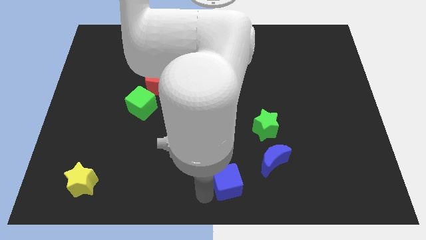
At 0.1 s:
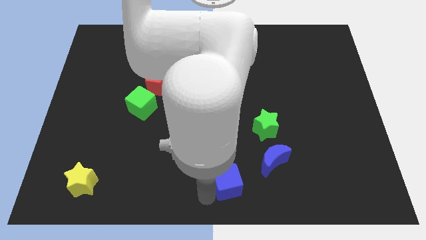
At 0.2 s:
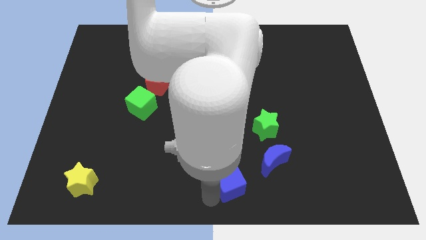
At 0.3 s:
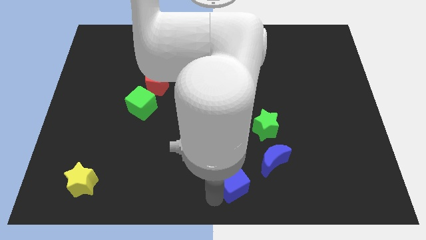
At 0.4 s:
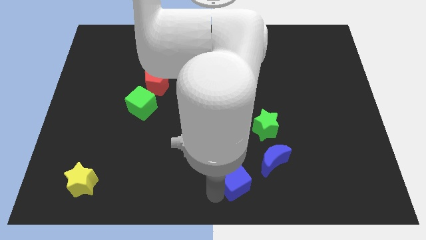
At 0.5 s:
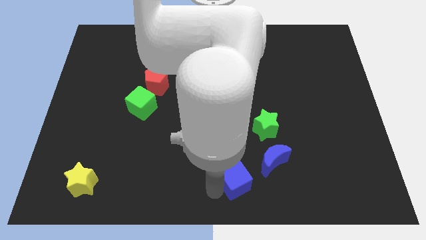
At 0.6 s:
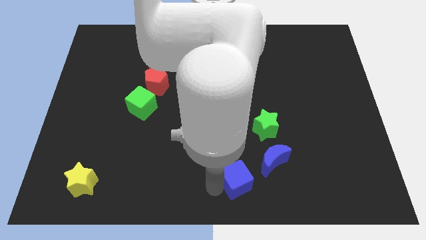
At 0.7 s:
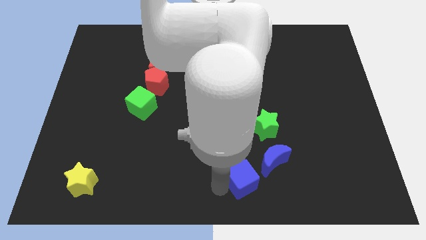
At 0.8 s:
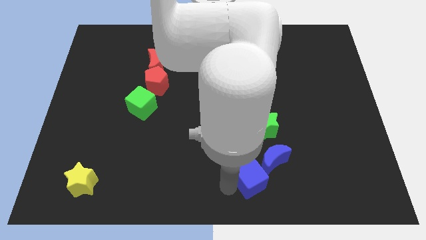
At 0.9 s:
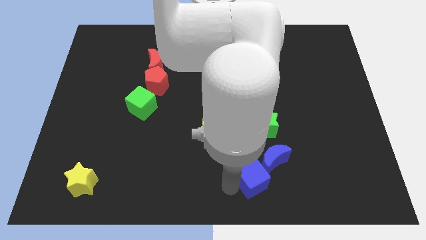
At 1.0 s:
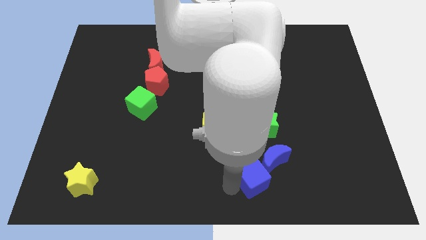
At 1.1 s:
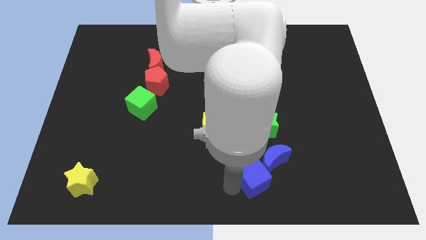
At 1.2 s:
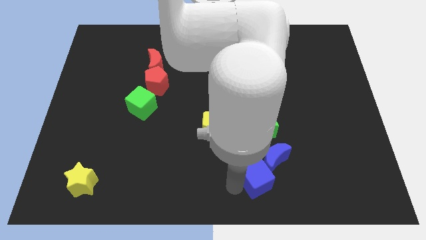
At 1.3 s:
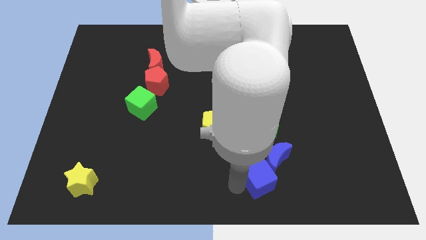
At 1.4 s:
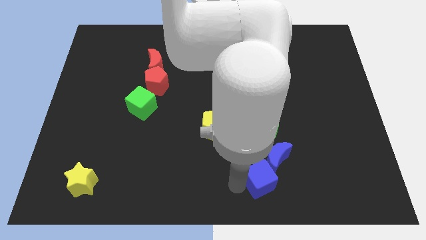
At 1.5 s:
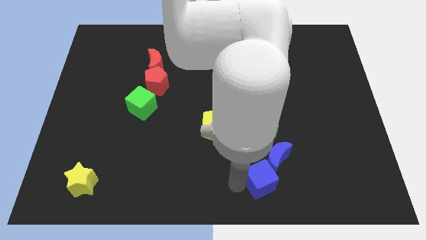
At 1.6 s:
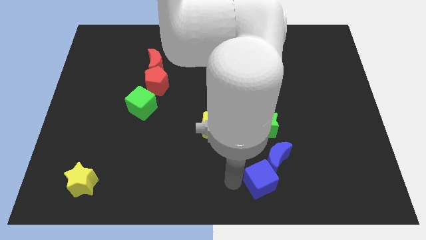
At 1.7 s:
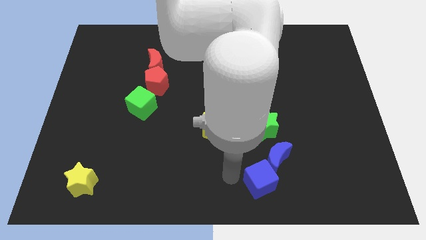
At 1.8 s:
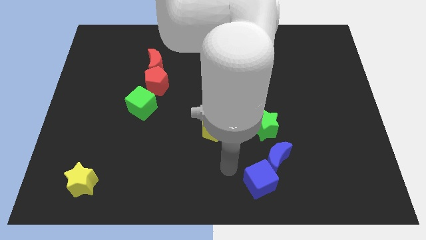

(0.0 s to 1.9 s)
move the blue cube towards the blue crescent

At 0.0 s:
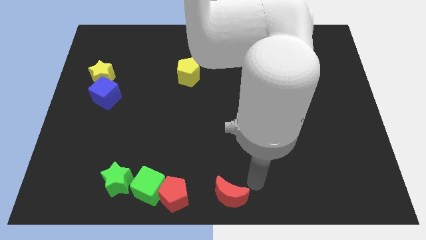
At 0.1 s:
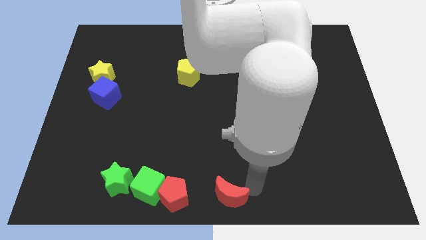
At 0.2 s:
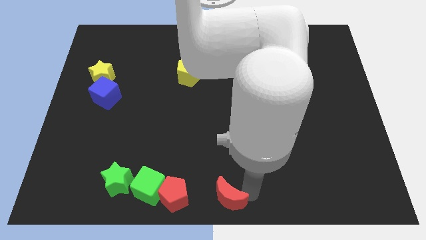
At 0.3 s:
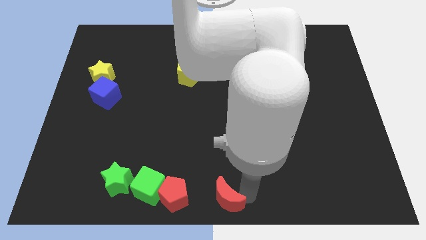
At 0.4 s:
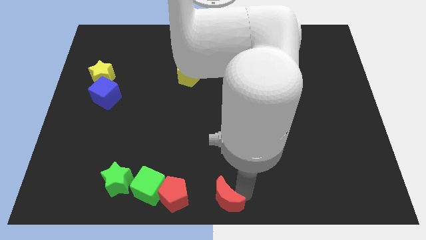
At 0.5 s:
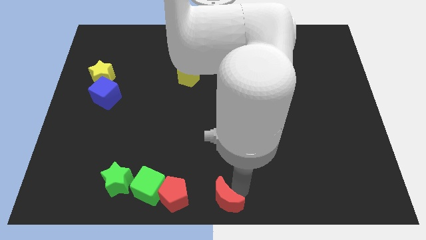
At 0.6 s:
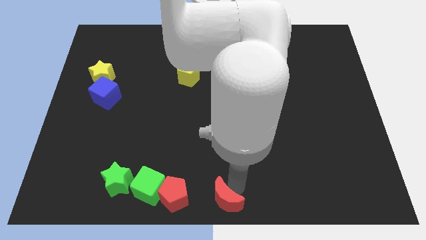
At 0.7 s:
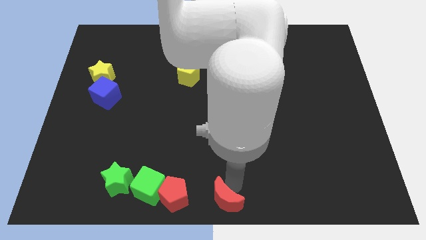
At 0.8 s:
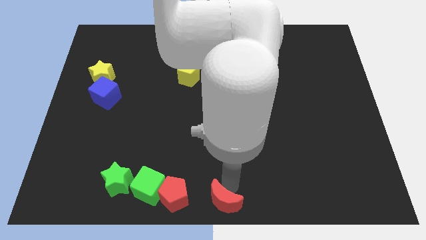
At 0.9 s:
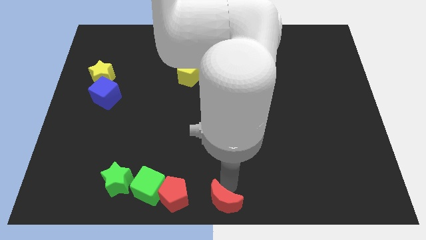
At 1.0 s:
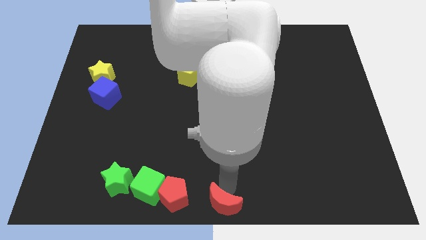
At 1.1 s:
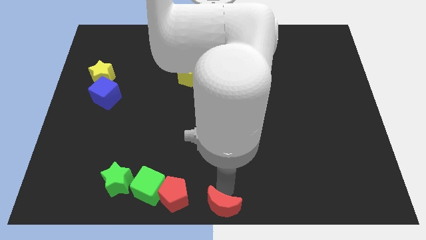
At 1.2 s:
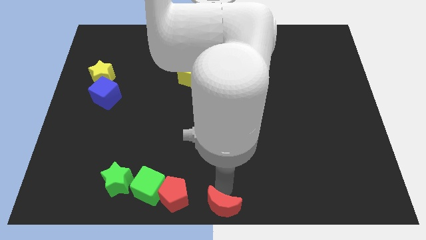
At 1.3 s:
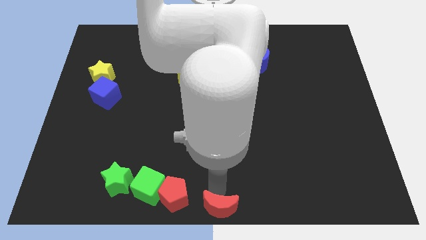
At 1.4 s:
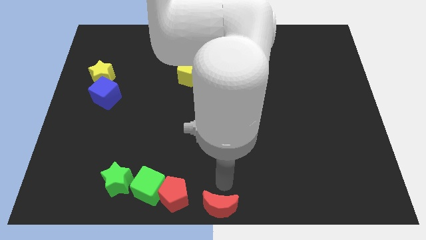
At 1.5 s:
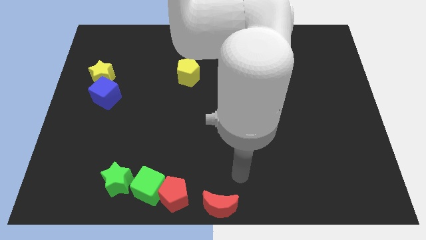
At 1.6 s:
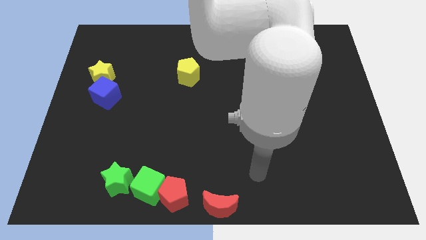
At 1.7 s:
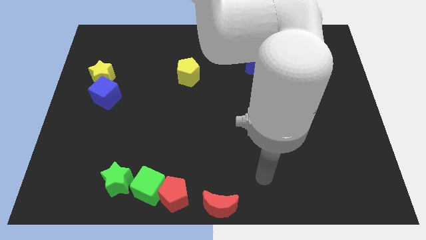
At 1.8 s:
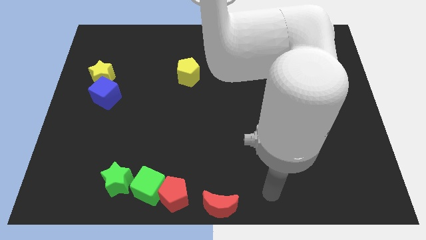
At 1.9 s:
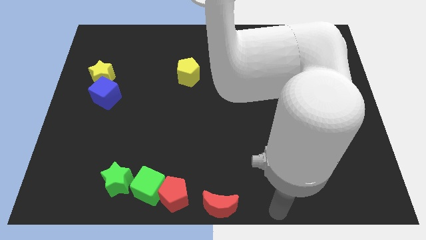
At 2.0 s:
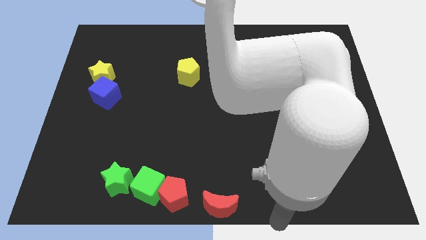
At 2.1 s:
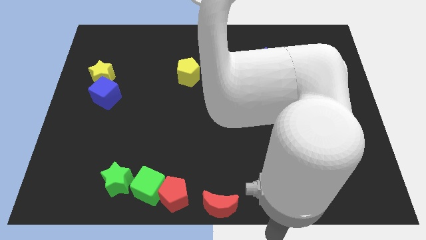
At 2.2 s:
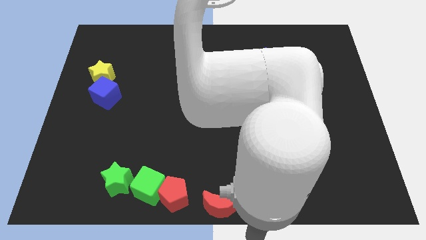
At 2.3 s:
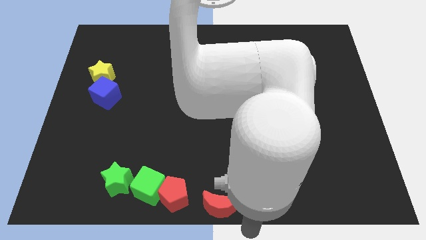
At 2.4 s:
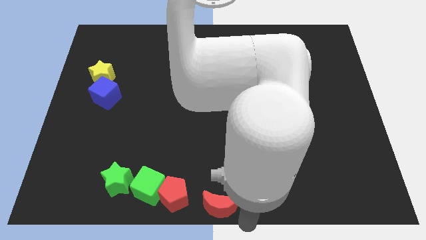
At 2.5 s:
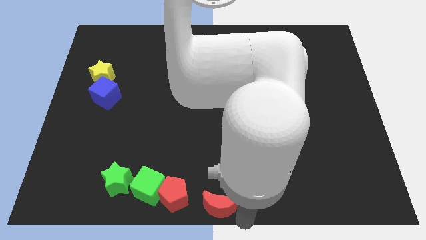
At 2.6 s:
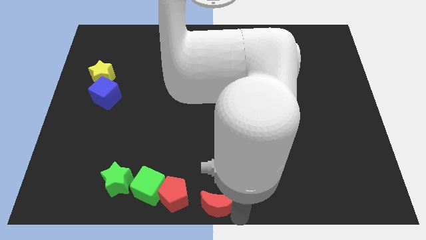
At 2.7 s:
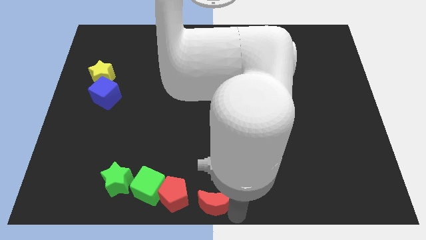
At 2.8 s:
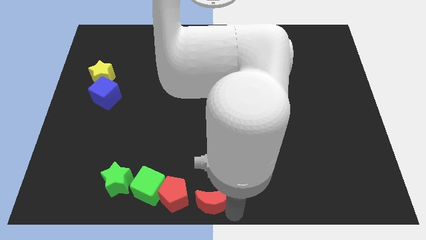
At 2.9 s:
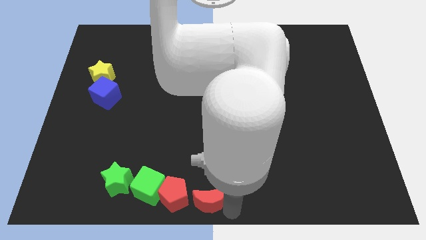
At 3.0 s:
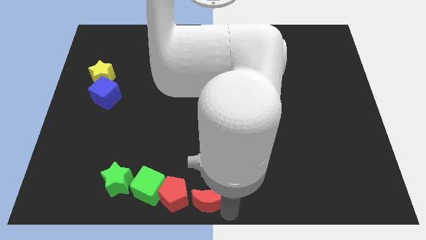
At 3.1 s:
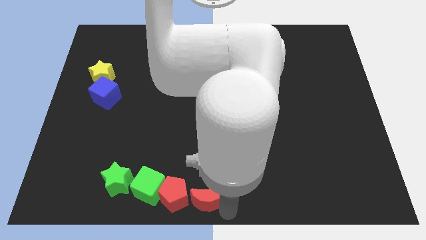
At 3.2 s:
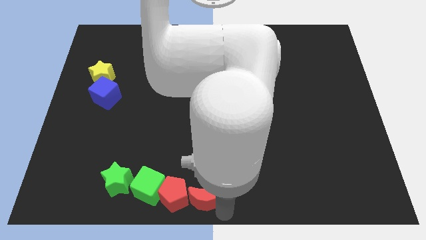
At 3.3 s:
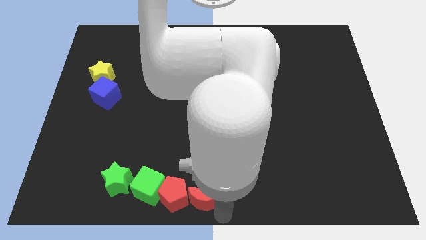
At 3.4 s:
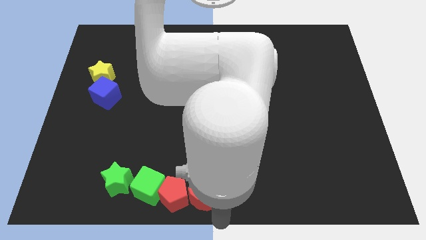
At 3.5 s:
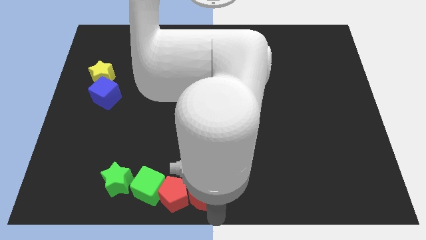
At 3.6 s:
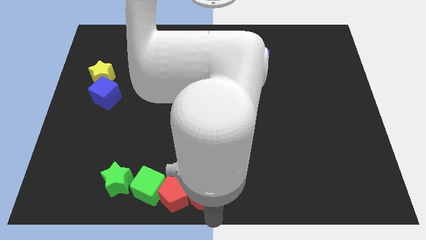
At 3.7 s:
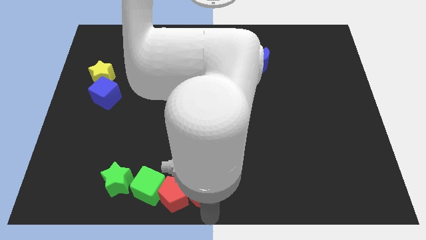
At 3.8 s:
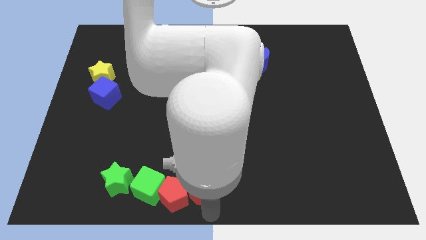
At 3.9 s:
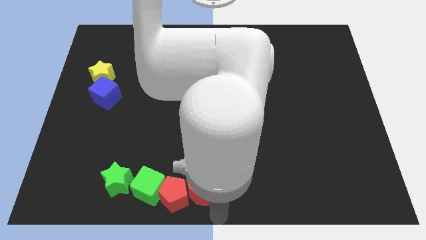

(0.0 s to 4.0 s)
place the red crescent to the right of the red pentagon

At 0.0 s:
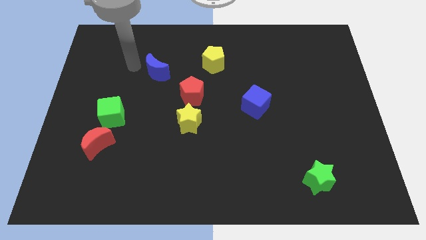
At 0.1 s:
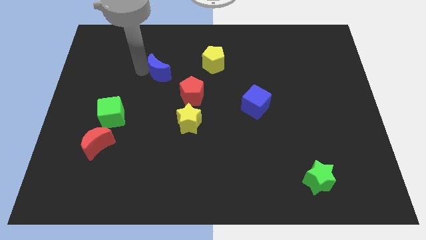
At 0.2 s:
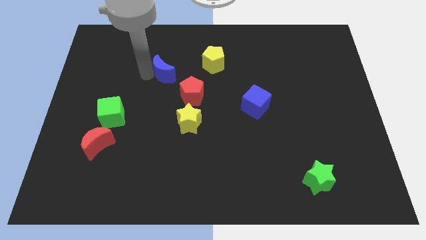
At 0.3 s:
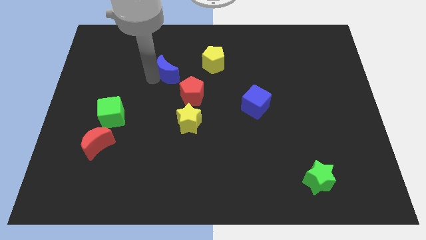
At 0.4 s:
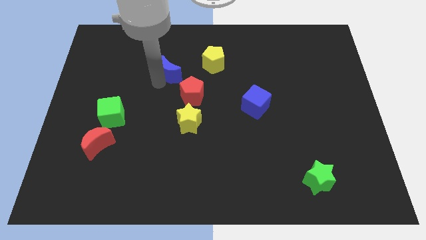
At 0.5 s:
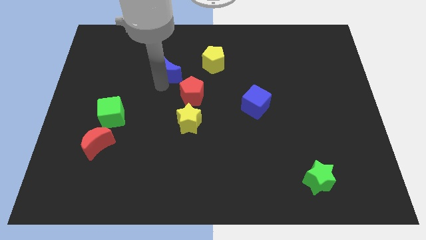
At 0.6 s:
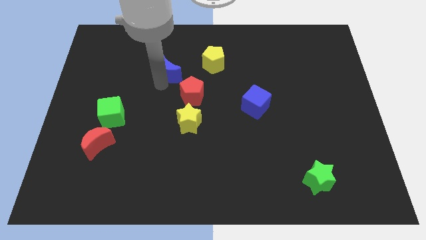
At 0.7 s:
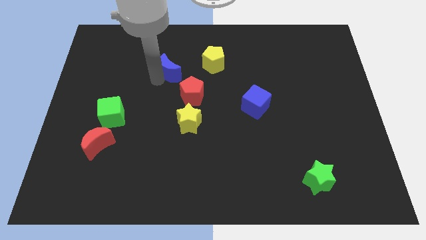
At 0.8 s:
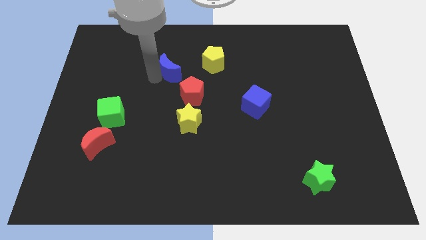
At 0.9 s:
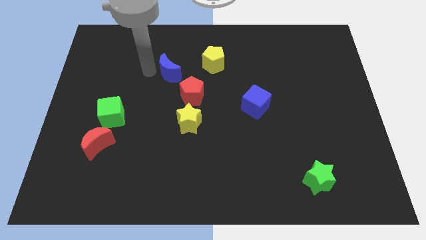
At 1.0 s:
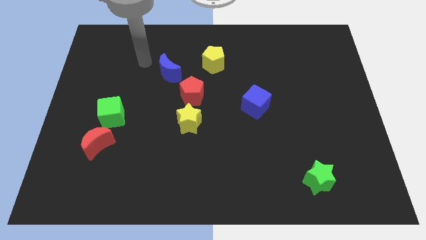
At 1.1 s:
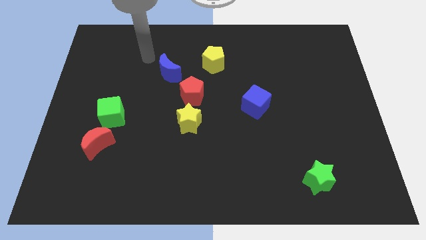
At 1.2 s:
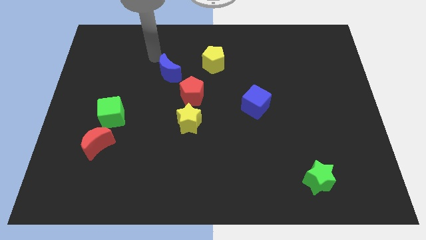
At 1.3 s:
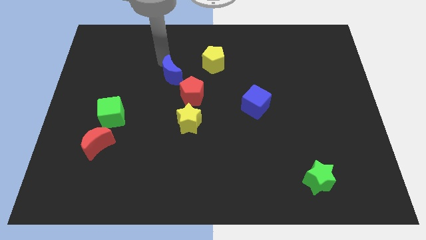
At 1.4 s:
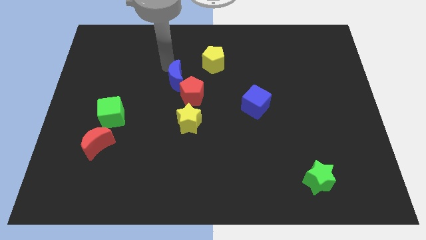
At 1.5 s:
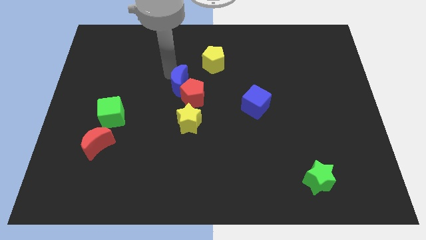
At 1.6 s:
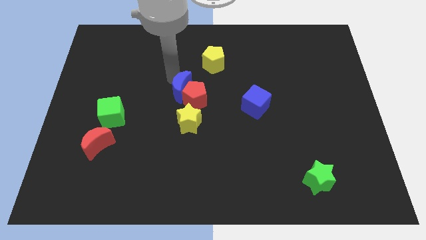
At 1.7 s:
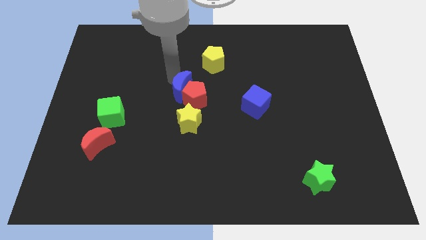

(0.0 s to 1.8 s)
push the blue crescent into red pentagon

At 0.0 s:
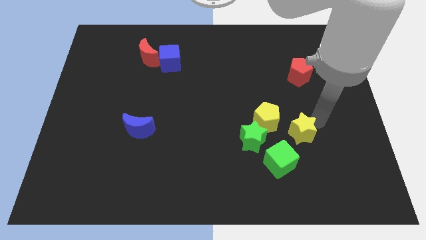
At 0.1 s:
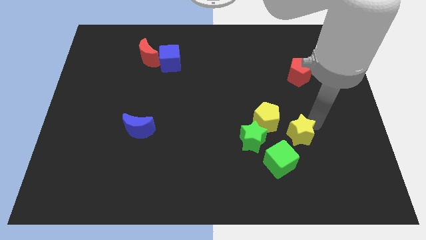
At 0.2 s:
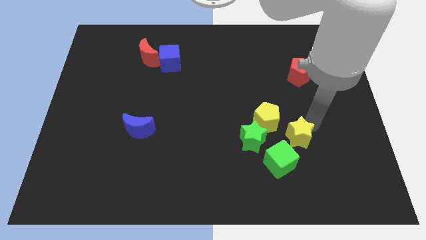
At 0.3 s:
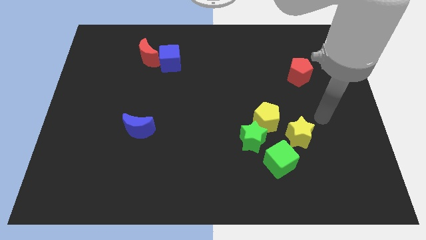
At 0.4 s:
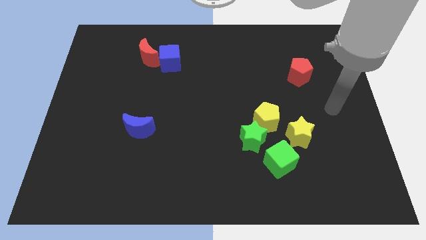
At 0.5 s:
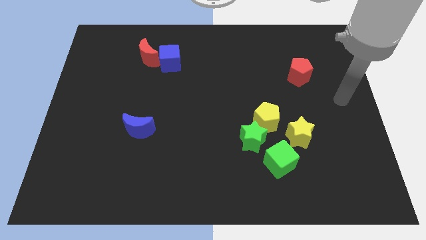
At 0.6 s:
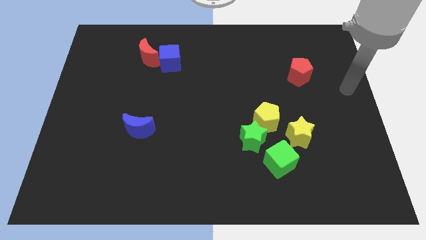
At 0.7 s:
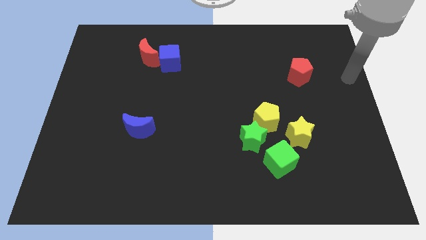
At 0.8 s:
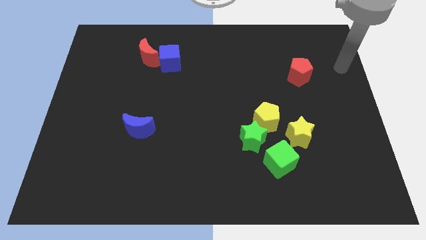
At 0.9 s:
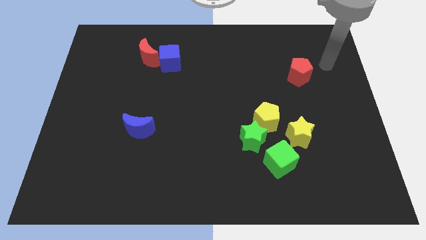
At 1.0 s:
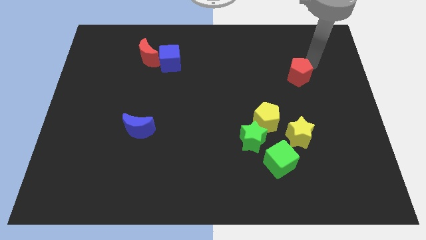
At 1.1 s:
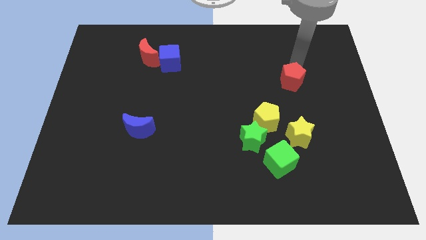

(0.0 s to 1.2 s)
place the arm diagonally to the red pentagon
